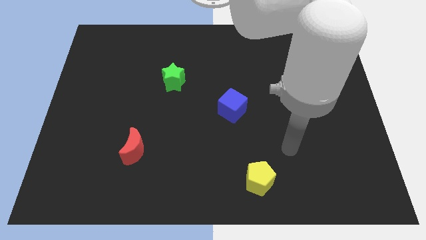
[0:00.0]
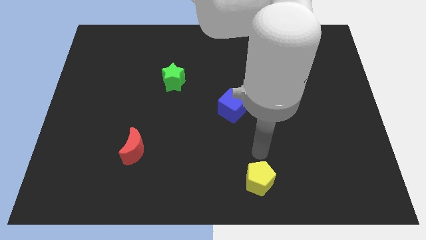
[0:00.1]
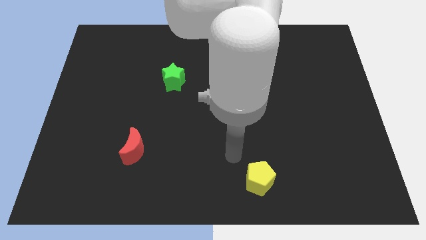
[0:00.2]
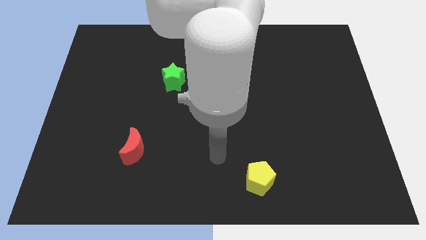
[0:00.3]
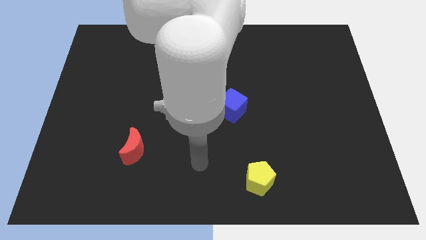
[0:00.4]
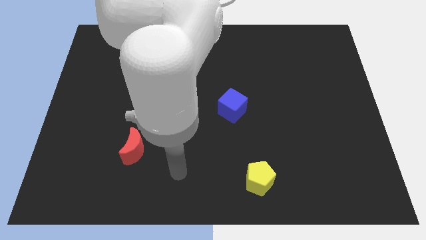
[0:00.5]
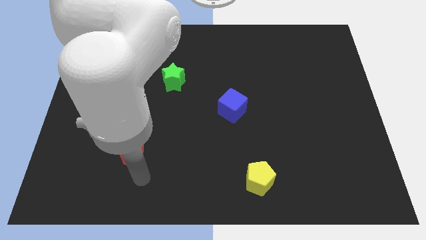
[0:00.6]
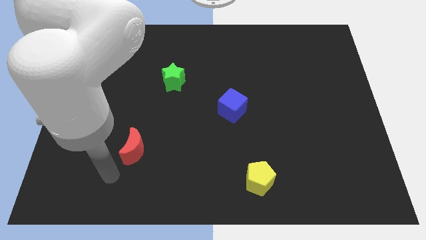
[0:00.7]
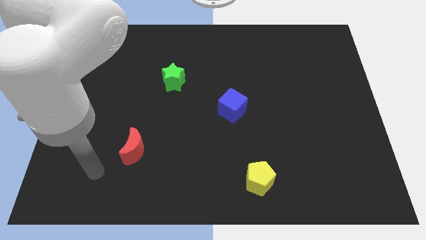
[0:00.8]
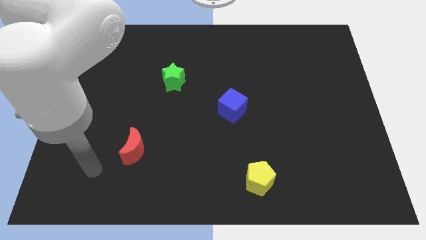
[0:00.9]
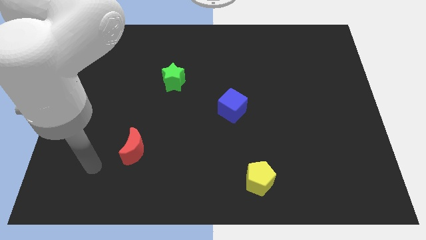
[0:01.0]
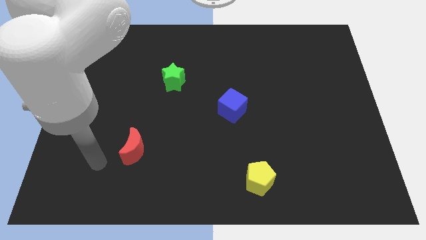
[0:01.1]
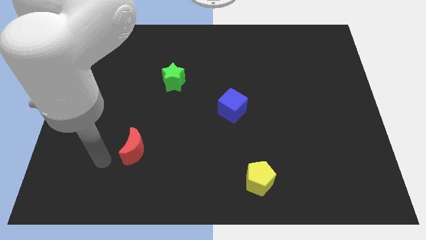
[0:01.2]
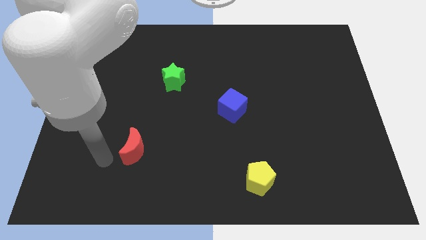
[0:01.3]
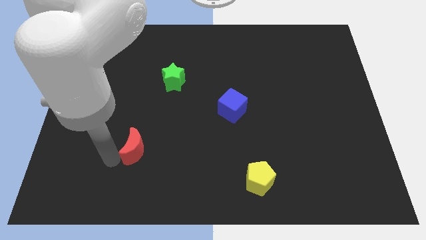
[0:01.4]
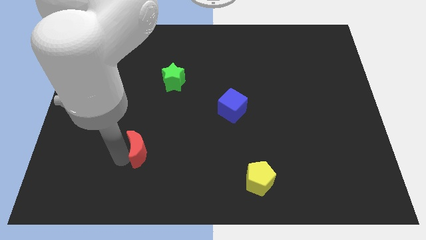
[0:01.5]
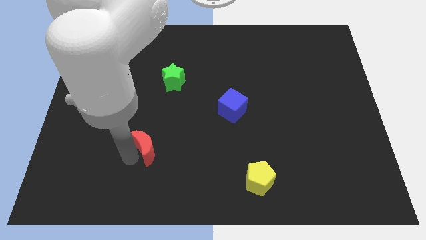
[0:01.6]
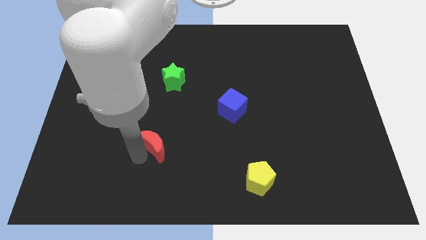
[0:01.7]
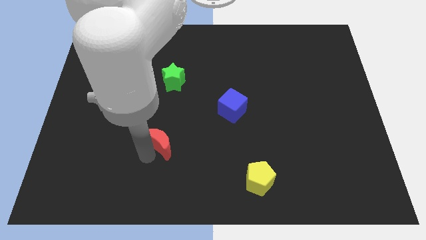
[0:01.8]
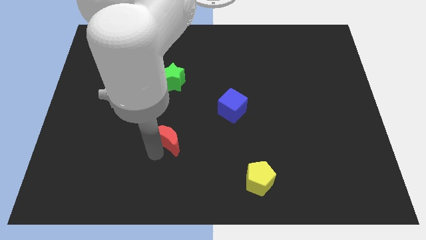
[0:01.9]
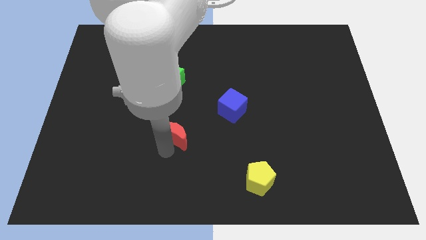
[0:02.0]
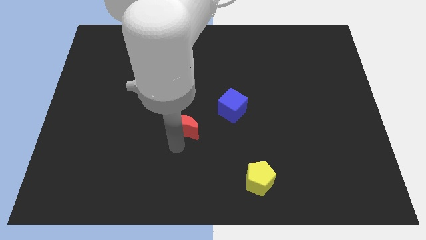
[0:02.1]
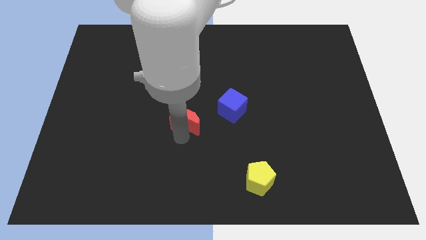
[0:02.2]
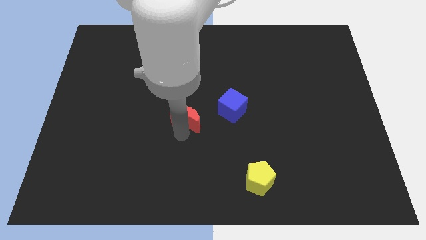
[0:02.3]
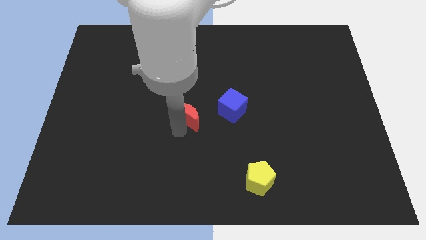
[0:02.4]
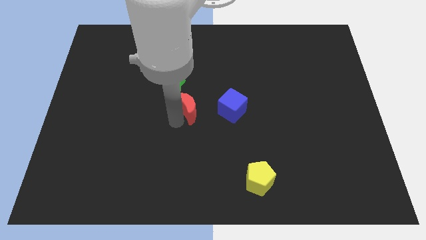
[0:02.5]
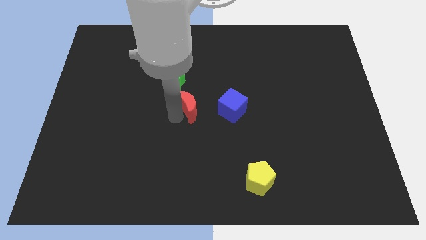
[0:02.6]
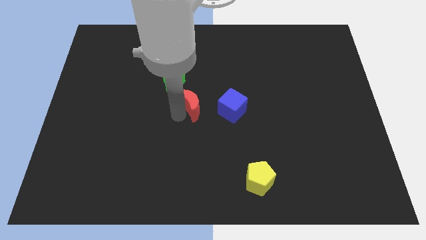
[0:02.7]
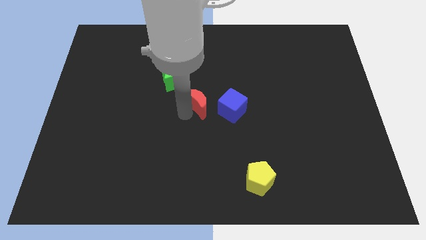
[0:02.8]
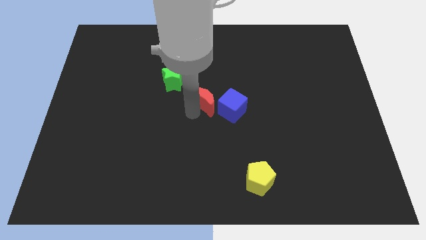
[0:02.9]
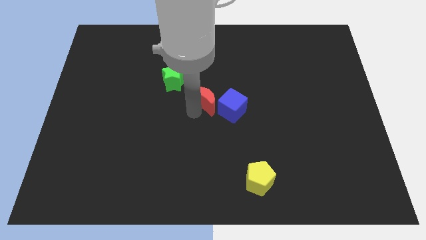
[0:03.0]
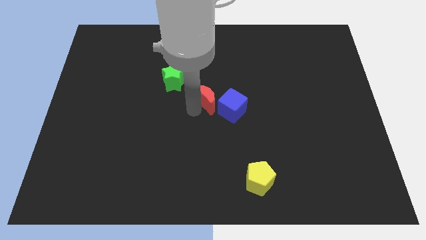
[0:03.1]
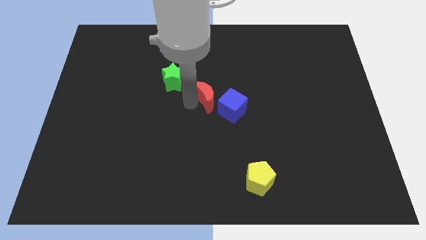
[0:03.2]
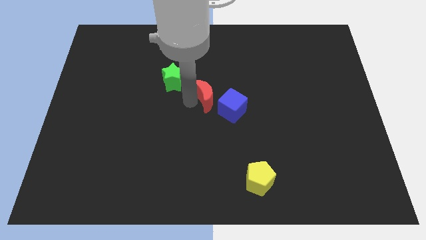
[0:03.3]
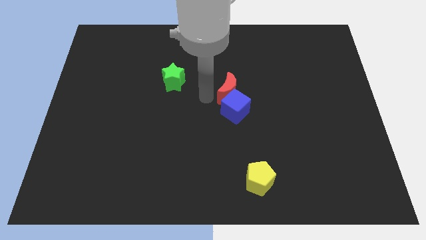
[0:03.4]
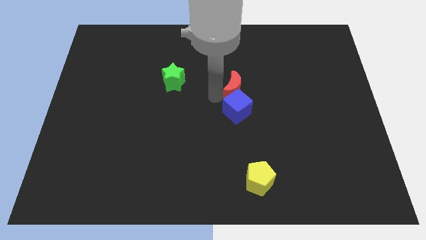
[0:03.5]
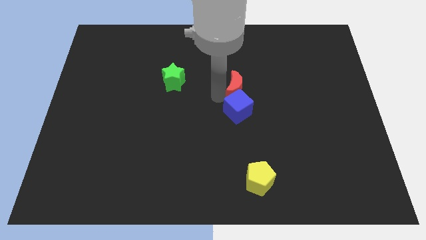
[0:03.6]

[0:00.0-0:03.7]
push the red moon close to the cube

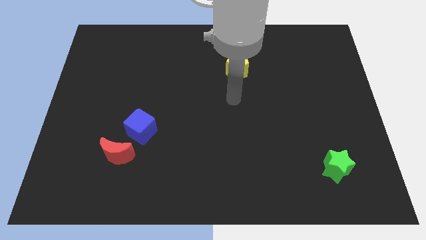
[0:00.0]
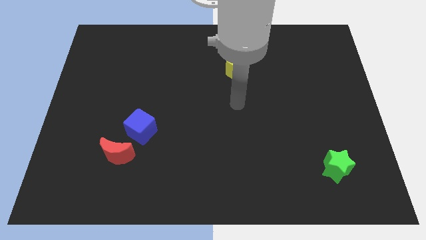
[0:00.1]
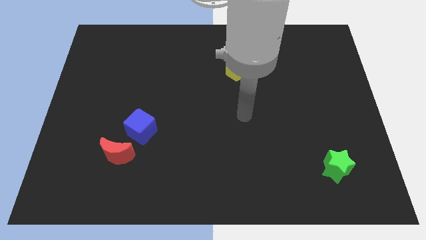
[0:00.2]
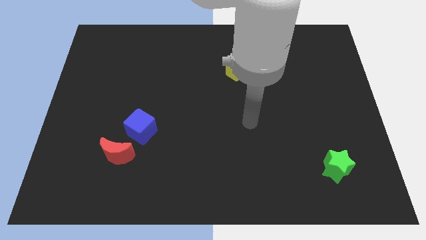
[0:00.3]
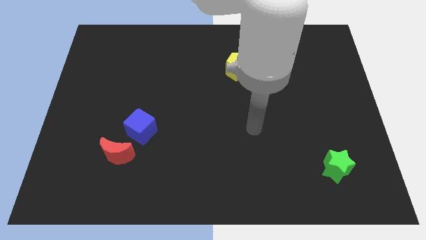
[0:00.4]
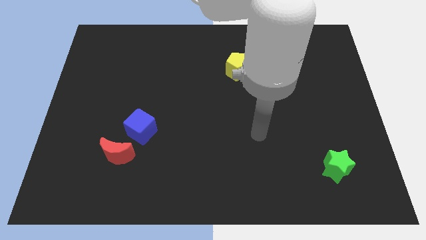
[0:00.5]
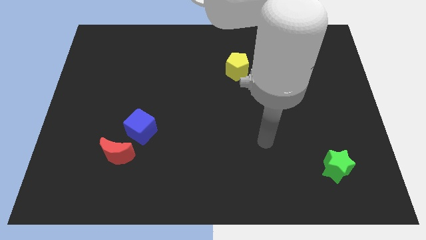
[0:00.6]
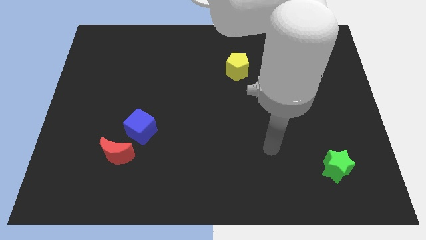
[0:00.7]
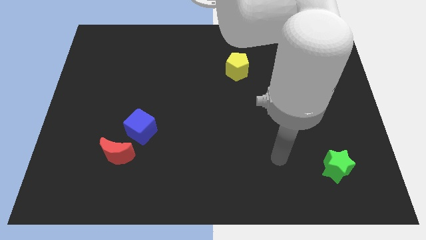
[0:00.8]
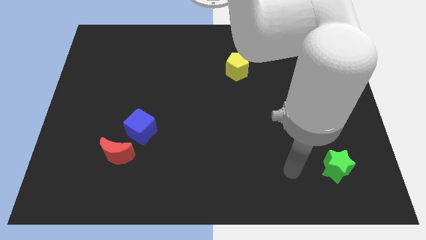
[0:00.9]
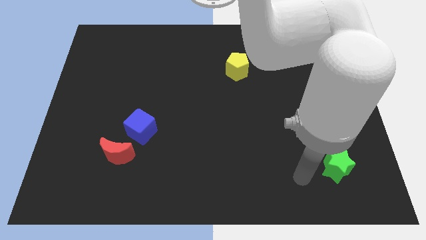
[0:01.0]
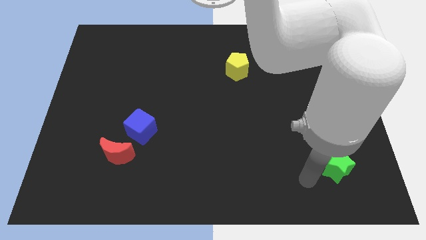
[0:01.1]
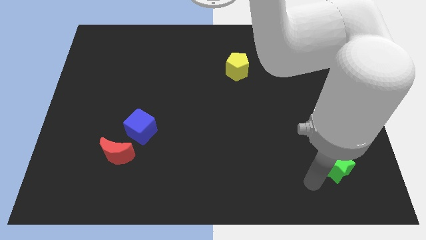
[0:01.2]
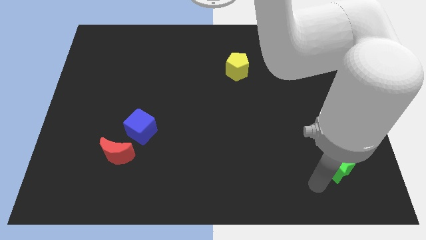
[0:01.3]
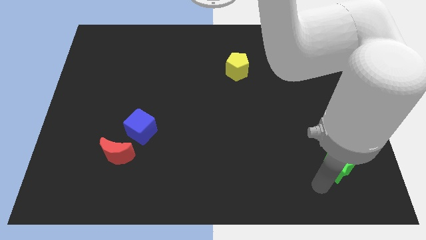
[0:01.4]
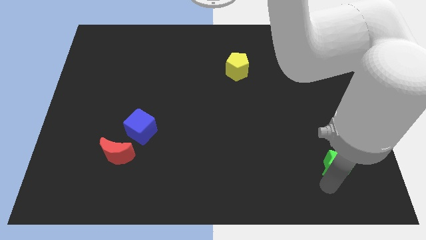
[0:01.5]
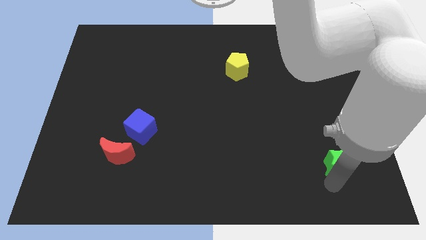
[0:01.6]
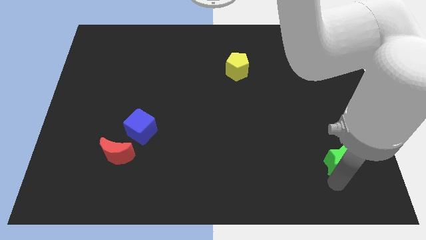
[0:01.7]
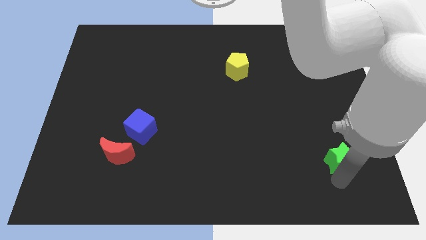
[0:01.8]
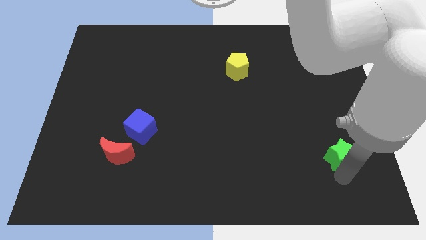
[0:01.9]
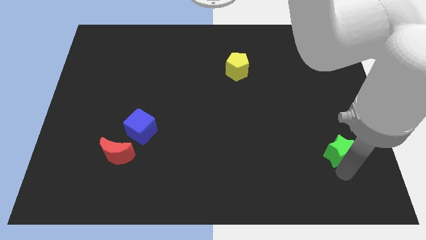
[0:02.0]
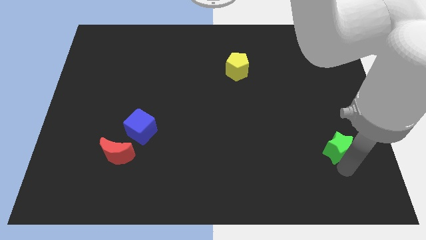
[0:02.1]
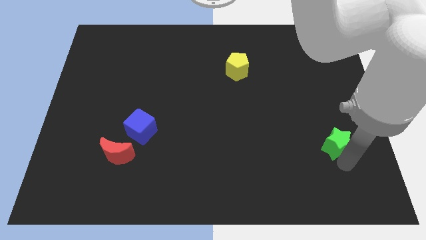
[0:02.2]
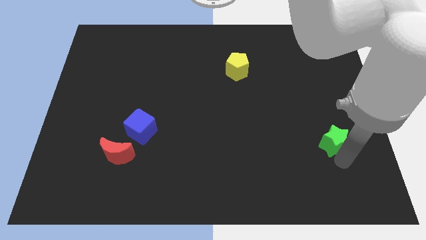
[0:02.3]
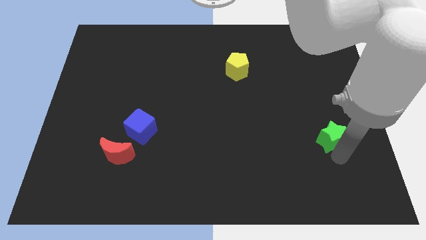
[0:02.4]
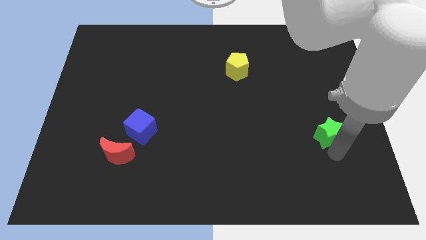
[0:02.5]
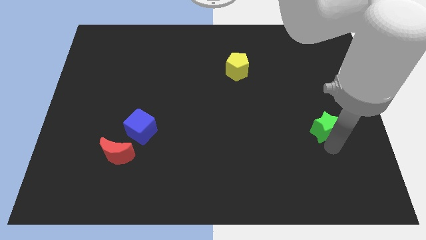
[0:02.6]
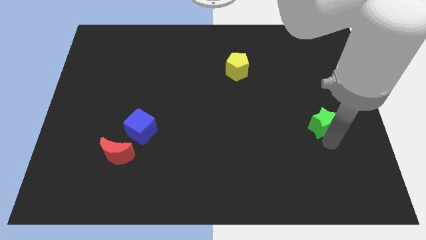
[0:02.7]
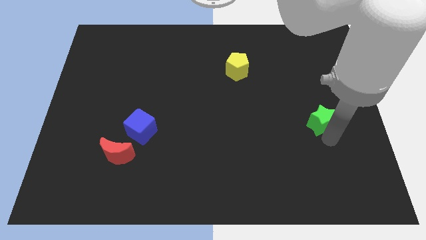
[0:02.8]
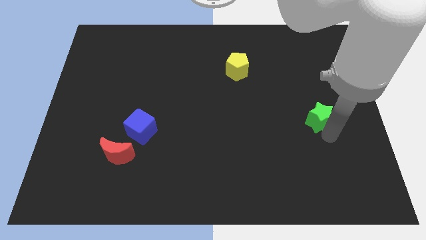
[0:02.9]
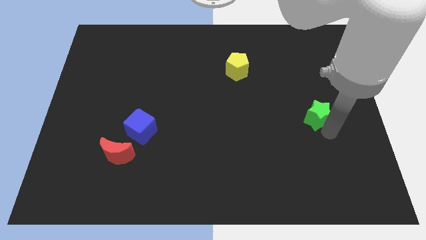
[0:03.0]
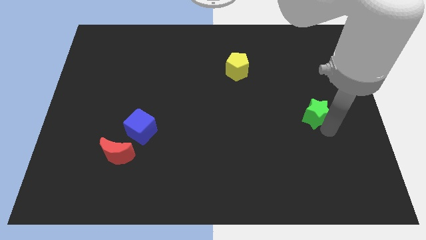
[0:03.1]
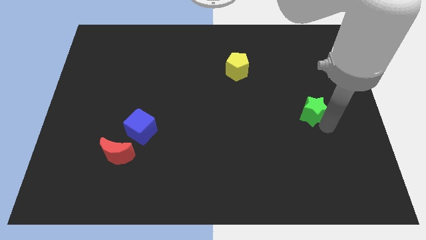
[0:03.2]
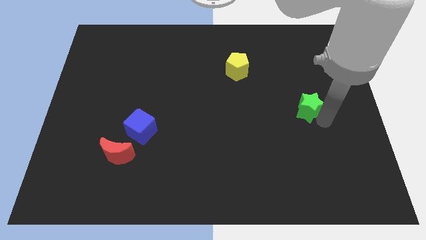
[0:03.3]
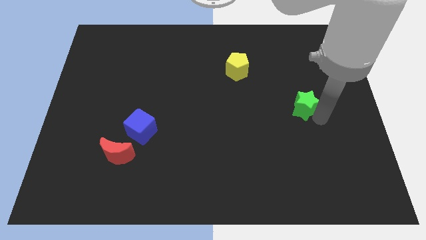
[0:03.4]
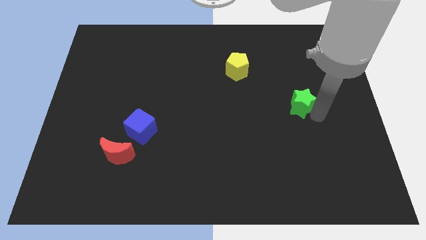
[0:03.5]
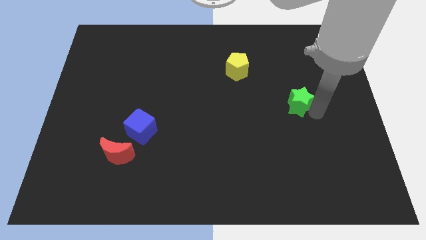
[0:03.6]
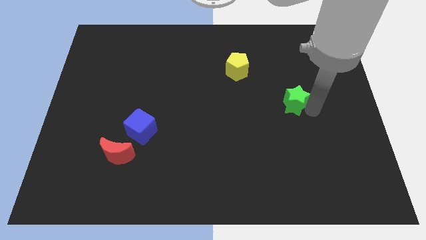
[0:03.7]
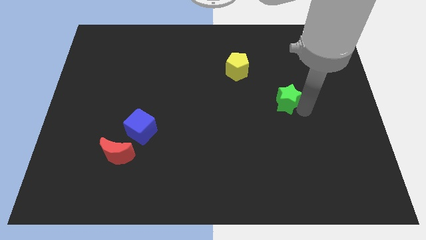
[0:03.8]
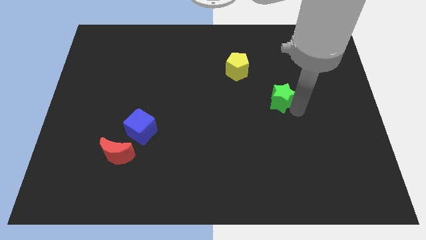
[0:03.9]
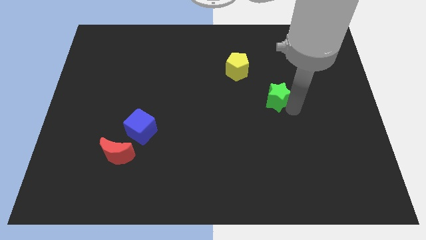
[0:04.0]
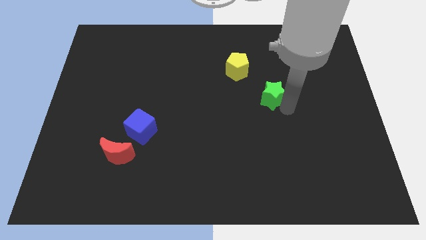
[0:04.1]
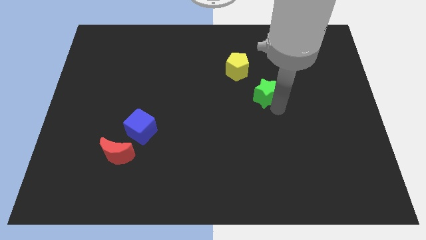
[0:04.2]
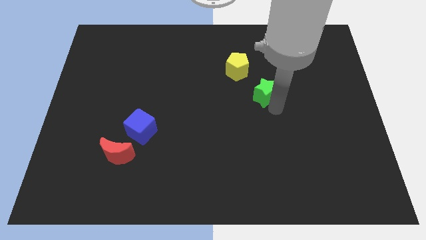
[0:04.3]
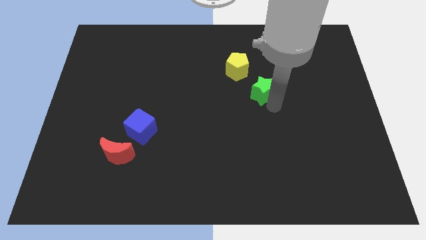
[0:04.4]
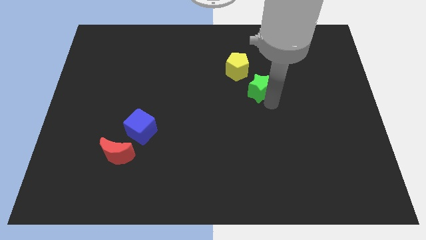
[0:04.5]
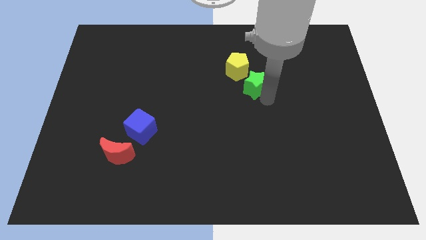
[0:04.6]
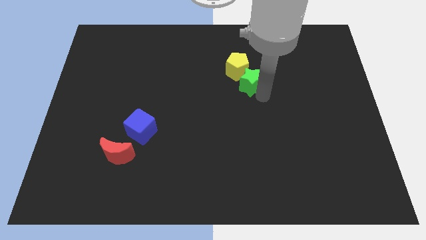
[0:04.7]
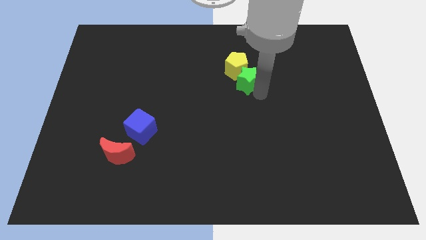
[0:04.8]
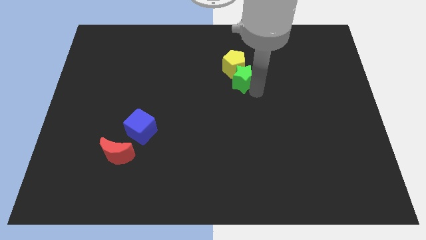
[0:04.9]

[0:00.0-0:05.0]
put the green block to the yellow pentagon

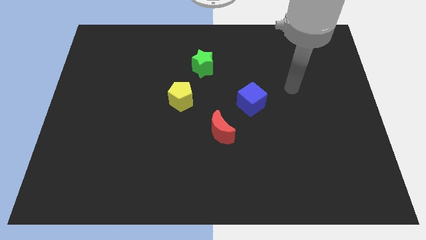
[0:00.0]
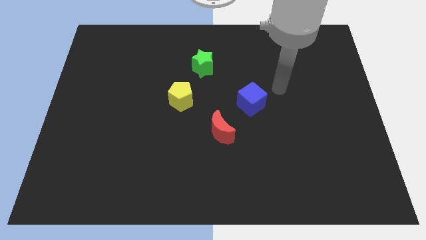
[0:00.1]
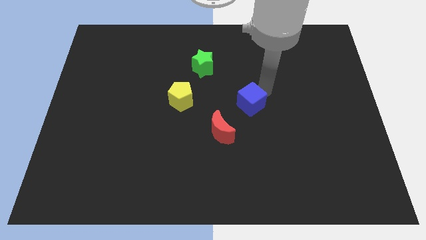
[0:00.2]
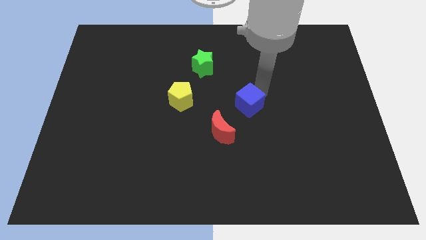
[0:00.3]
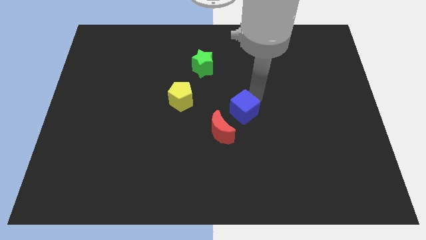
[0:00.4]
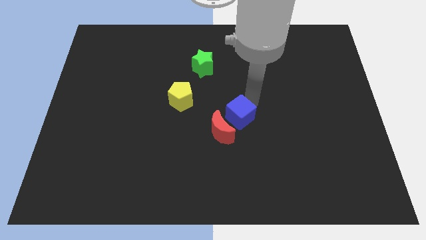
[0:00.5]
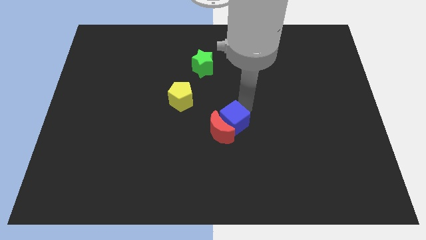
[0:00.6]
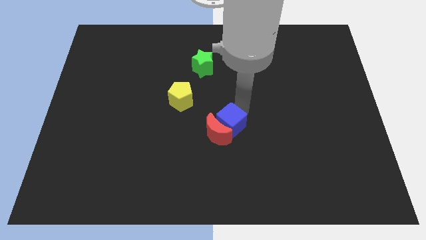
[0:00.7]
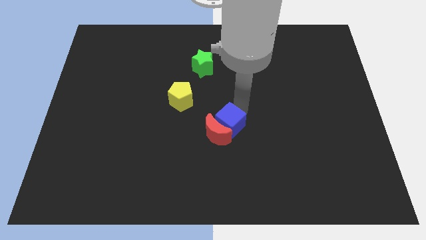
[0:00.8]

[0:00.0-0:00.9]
push the blue block to the red moon
